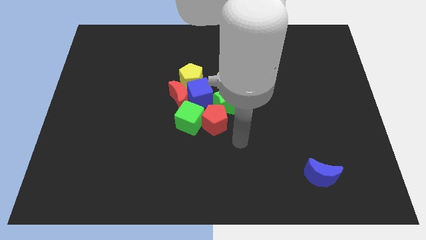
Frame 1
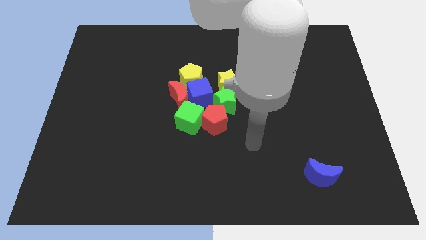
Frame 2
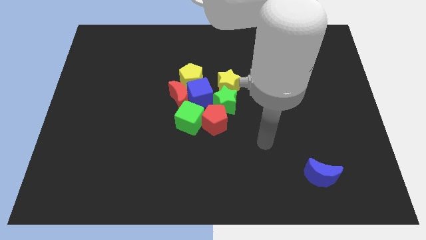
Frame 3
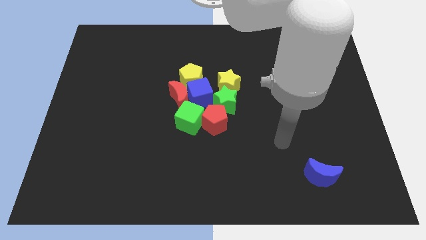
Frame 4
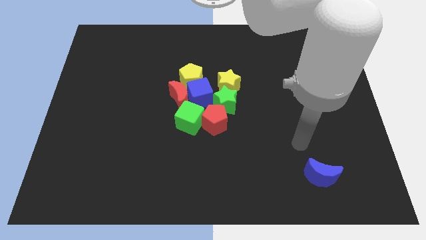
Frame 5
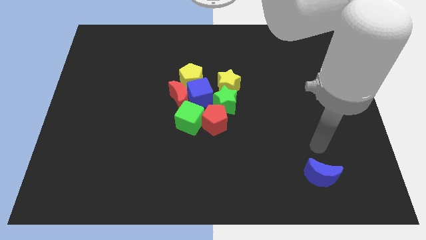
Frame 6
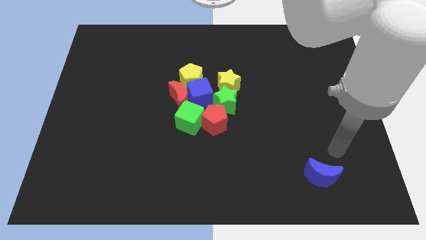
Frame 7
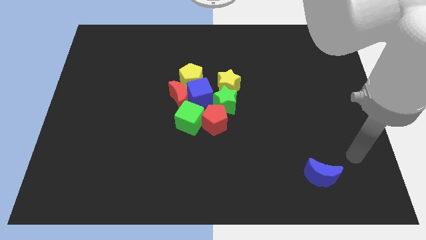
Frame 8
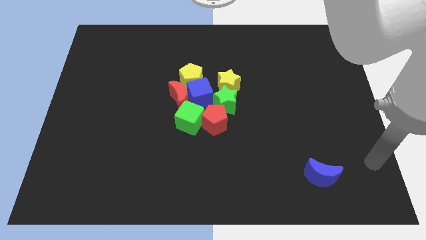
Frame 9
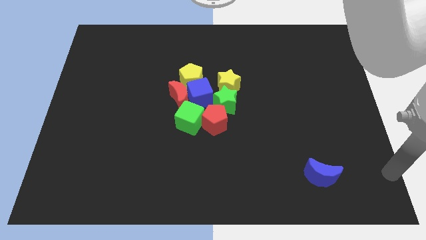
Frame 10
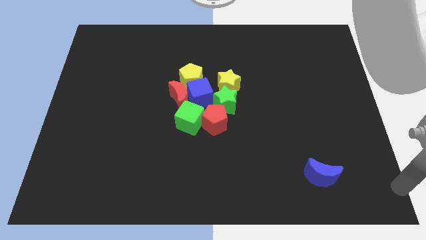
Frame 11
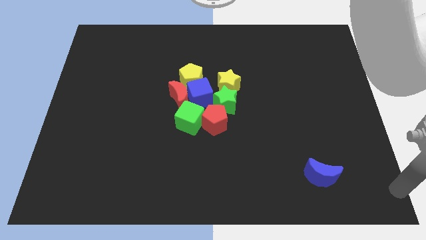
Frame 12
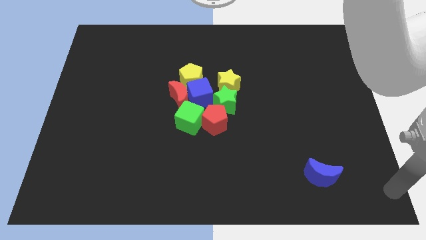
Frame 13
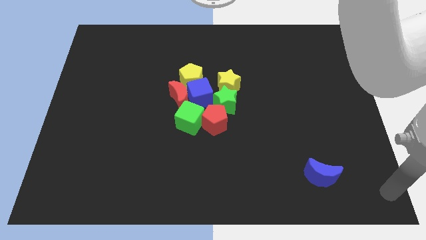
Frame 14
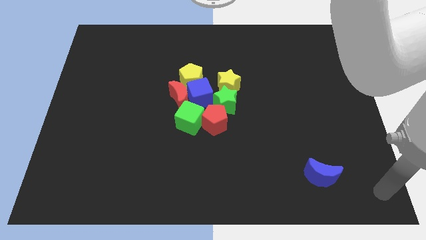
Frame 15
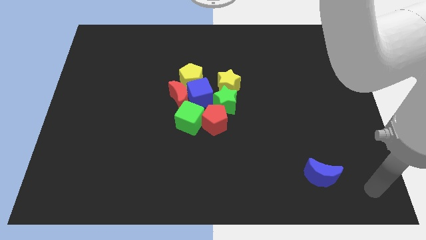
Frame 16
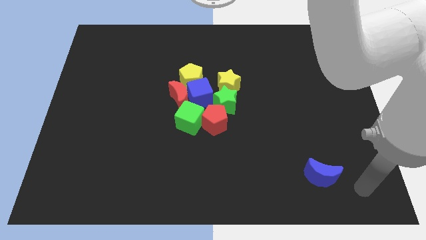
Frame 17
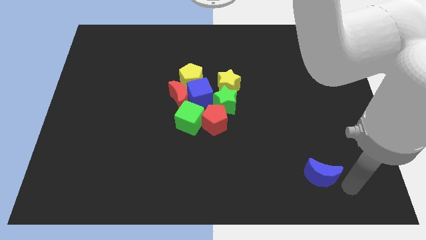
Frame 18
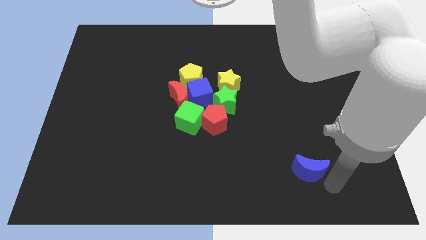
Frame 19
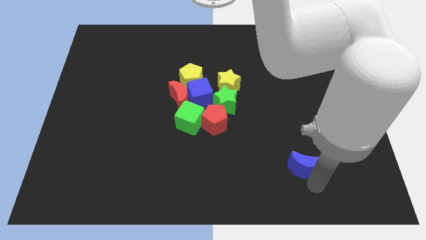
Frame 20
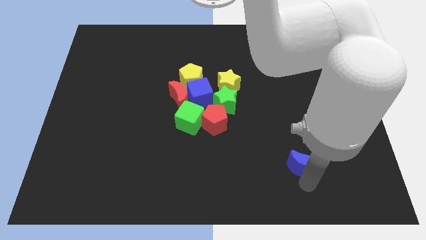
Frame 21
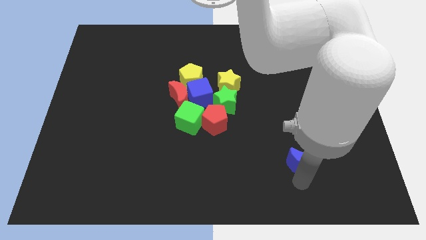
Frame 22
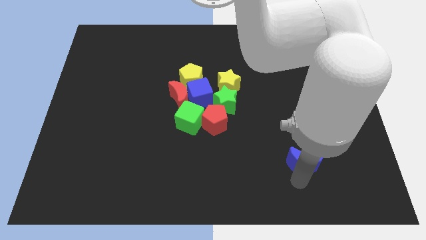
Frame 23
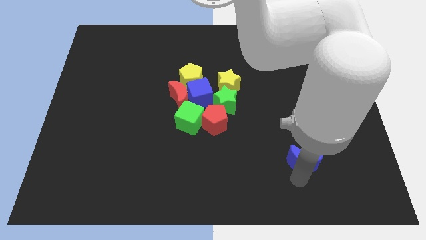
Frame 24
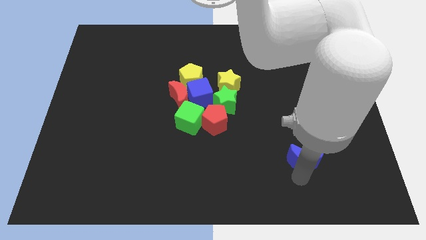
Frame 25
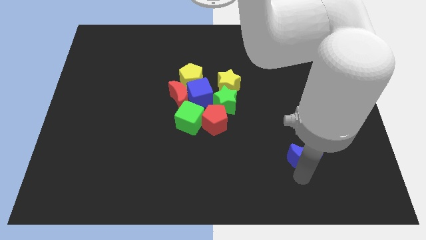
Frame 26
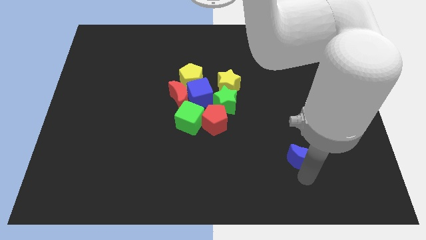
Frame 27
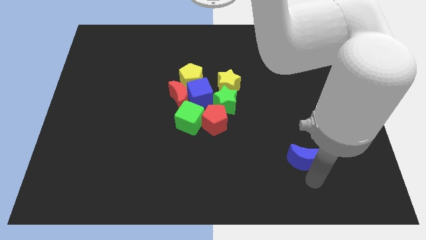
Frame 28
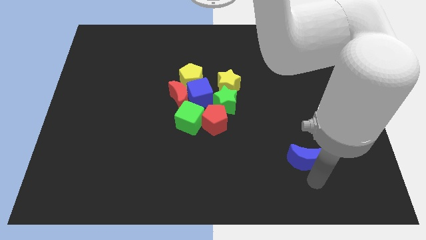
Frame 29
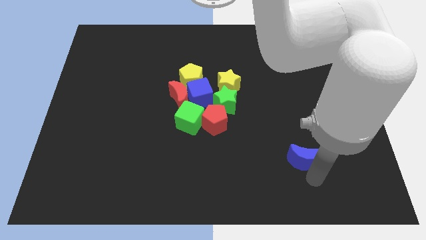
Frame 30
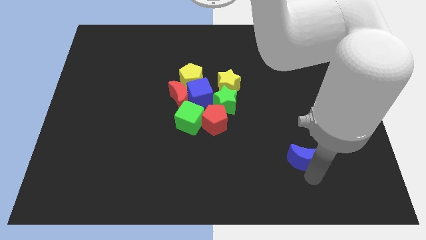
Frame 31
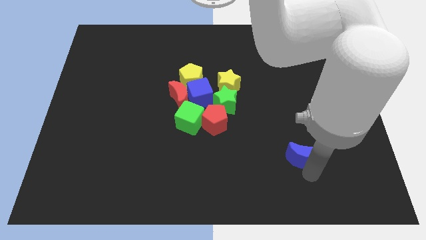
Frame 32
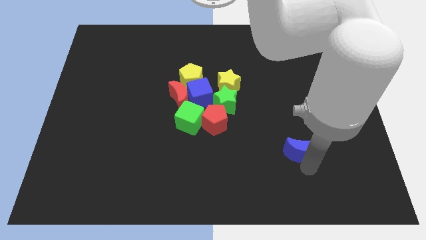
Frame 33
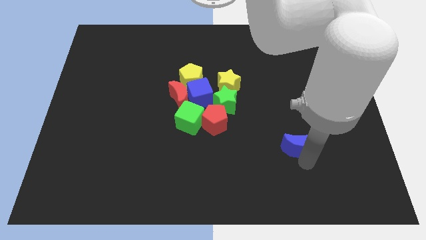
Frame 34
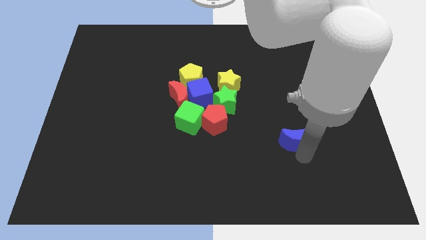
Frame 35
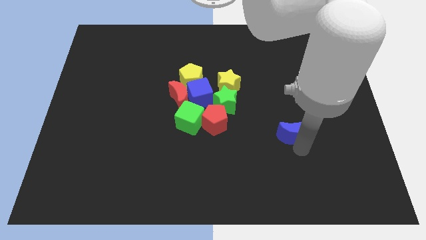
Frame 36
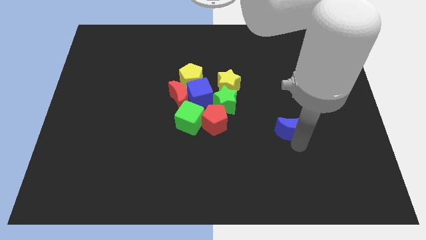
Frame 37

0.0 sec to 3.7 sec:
move the blue crescent to the top of the board

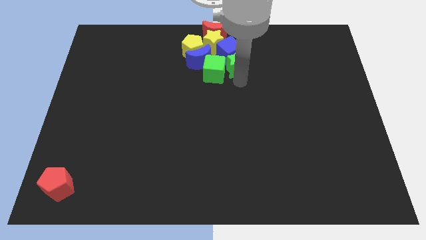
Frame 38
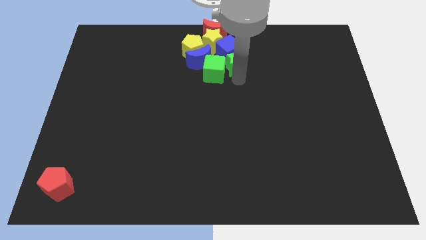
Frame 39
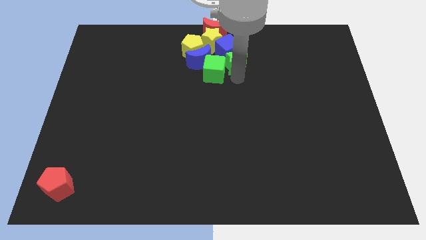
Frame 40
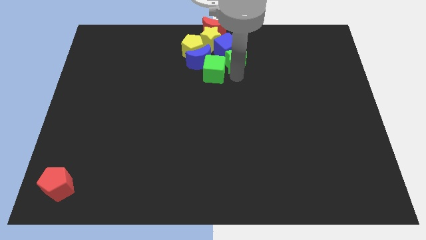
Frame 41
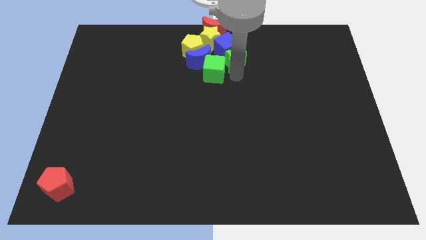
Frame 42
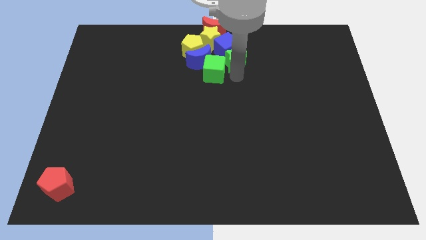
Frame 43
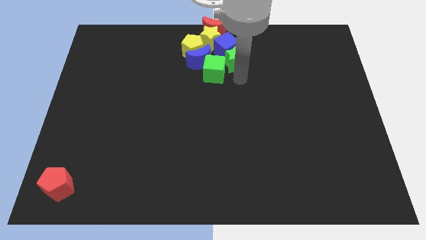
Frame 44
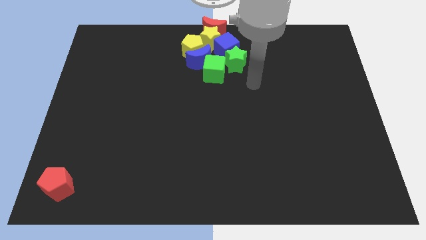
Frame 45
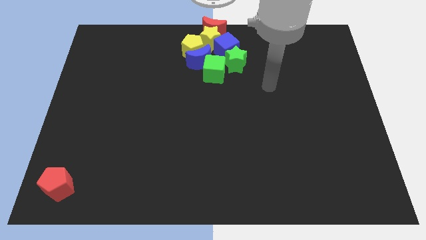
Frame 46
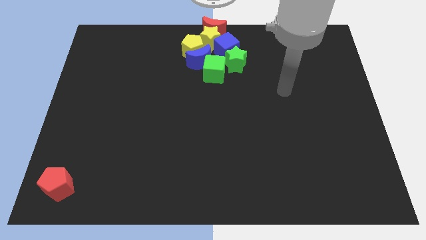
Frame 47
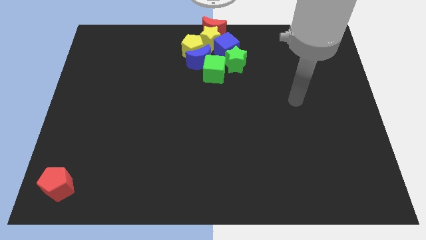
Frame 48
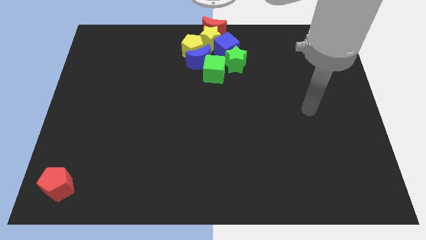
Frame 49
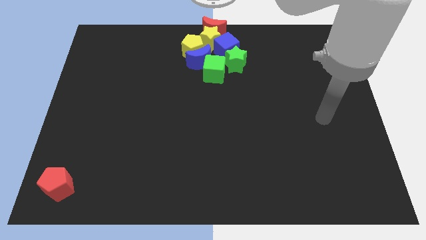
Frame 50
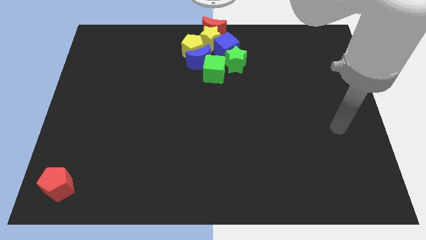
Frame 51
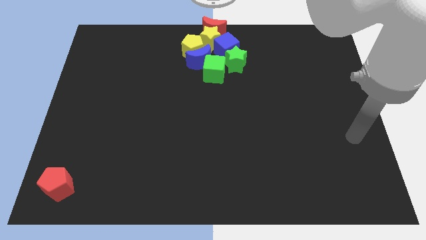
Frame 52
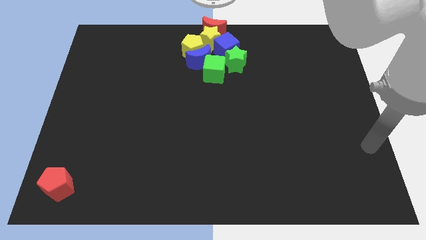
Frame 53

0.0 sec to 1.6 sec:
move your hand away from the green star

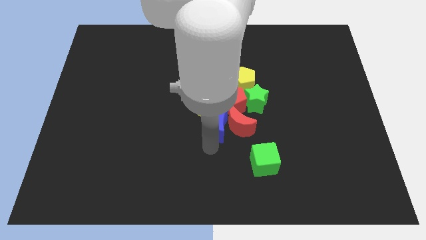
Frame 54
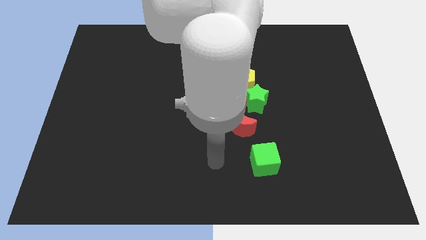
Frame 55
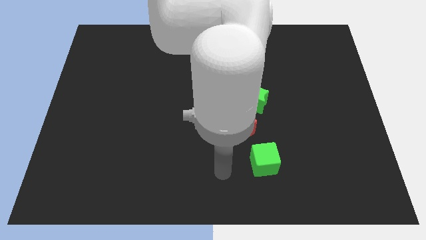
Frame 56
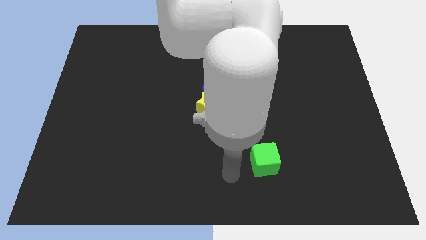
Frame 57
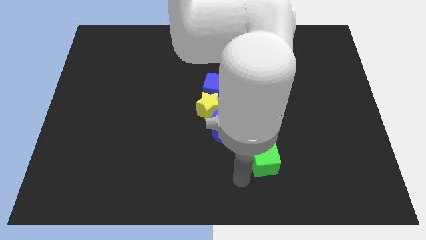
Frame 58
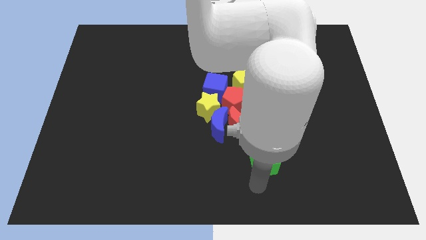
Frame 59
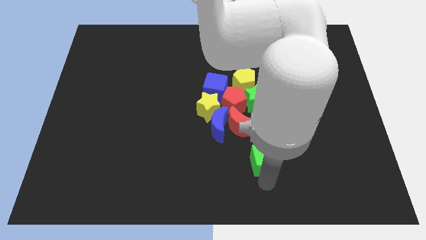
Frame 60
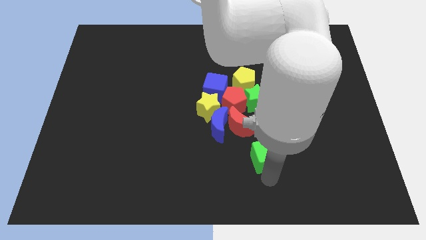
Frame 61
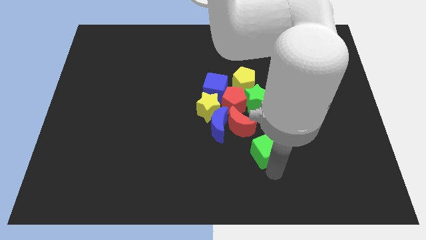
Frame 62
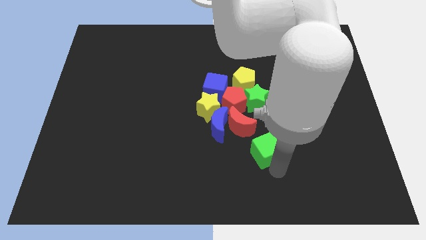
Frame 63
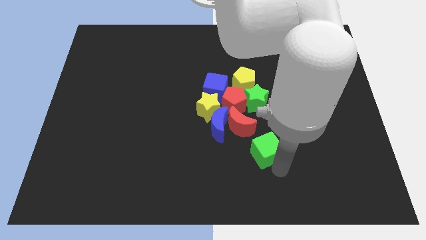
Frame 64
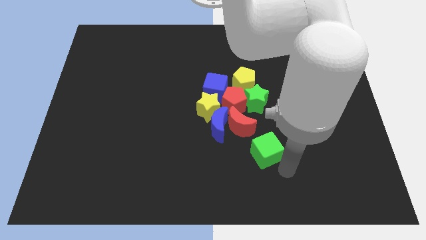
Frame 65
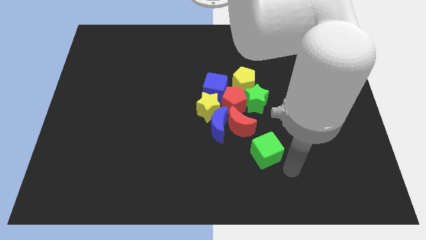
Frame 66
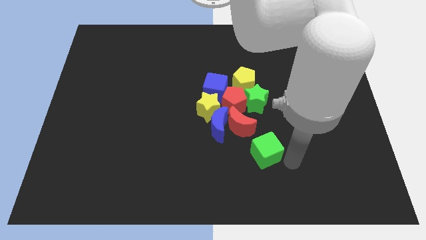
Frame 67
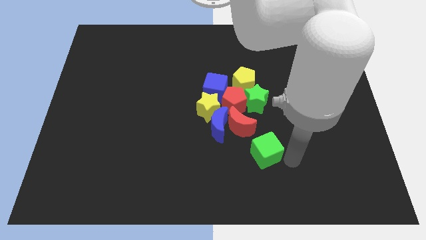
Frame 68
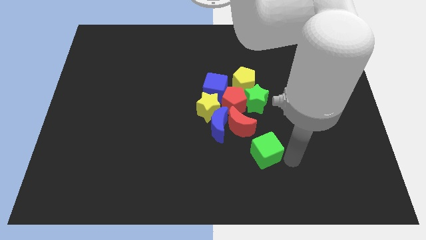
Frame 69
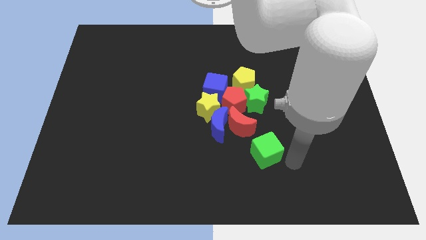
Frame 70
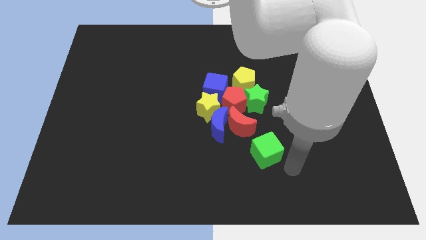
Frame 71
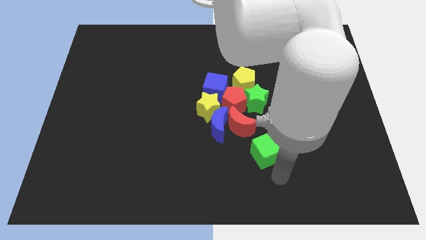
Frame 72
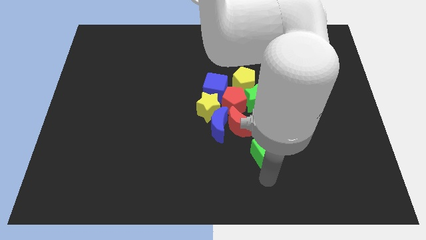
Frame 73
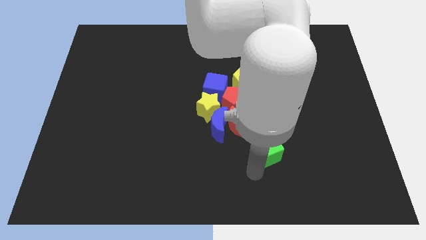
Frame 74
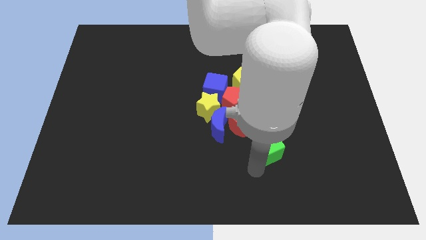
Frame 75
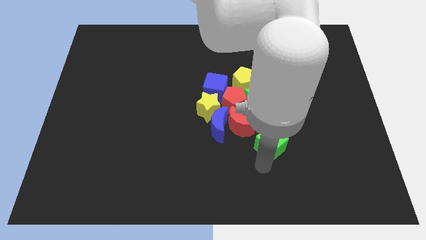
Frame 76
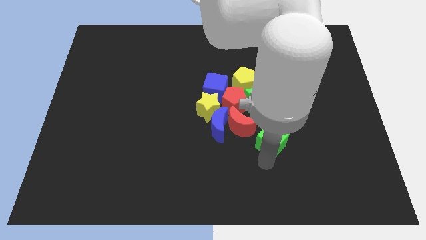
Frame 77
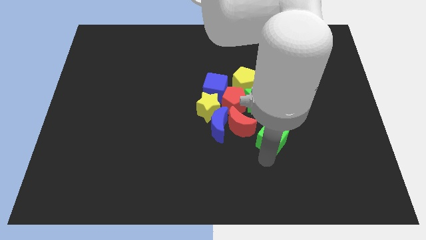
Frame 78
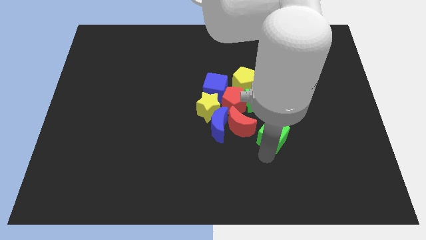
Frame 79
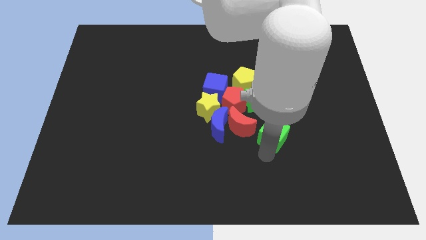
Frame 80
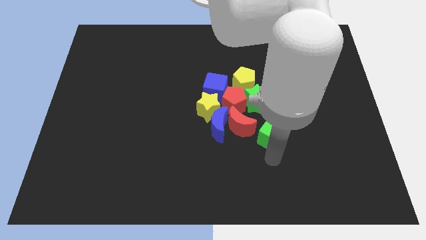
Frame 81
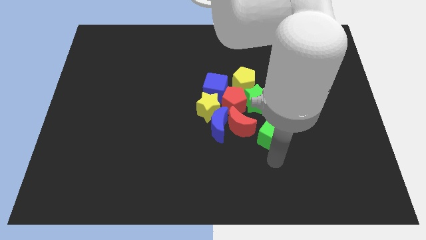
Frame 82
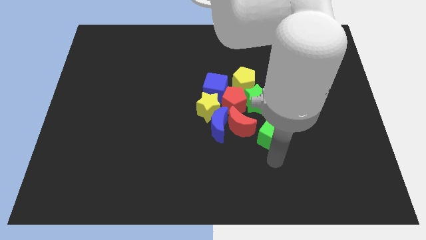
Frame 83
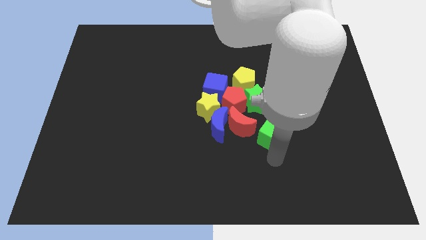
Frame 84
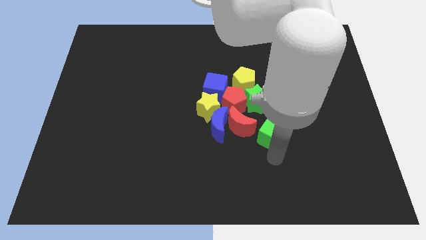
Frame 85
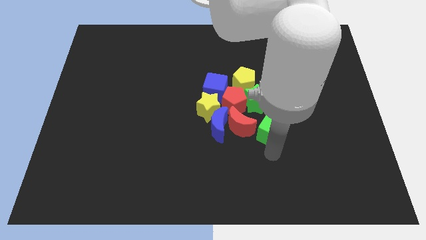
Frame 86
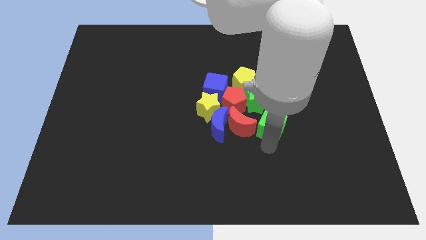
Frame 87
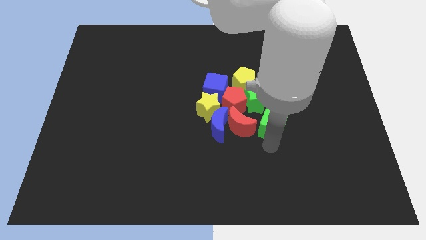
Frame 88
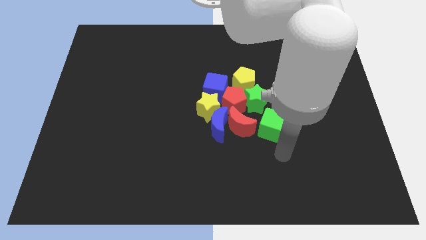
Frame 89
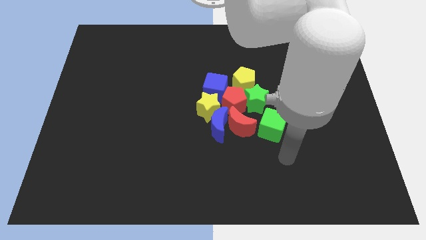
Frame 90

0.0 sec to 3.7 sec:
move the green cube to the right of the red moon
